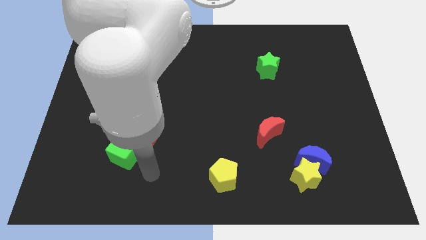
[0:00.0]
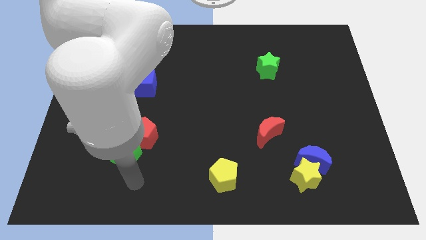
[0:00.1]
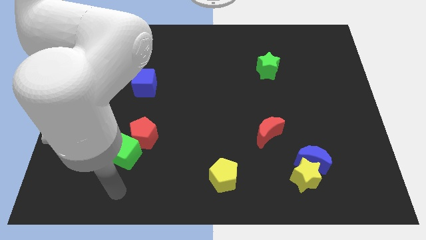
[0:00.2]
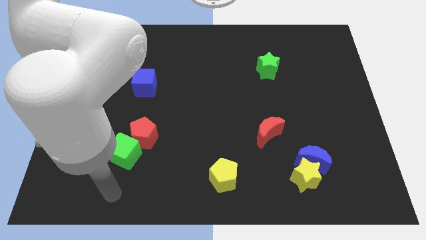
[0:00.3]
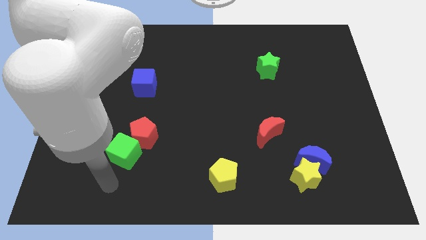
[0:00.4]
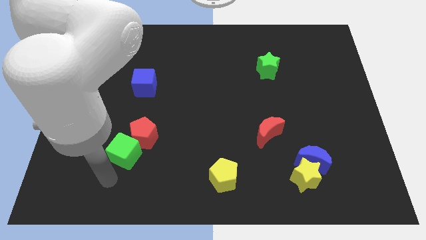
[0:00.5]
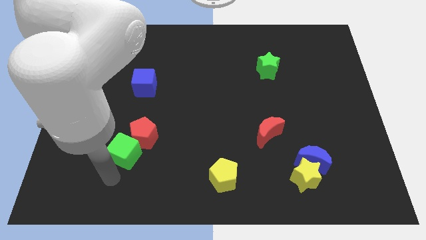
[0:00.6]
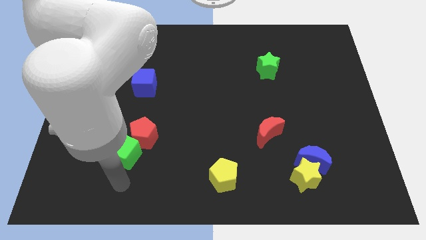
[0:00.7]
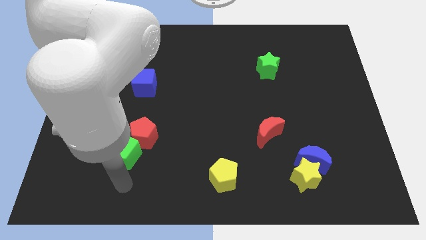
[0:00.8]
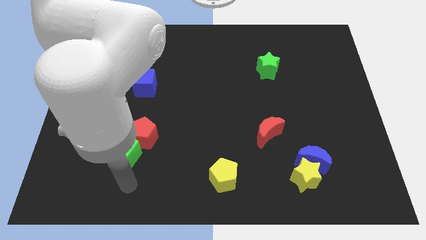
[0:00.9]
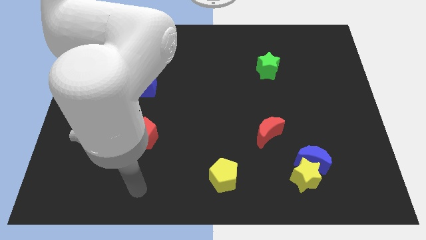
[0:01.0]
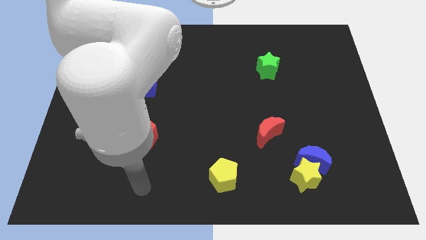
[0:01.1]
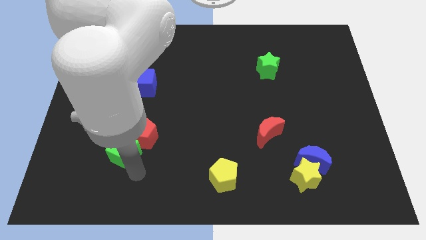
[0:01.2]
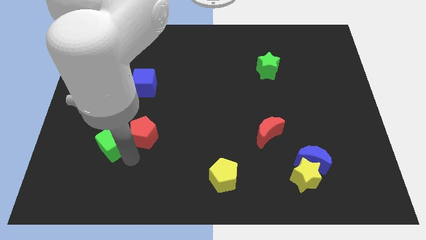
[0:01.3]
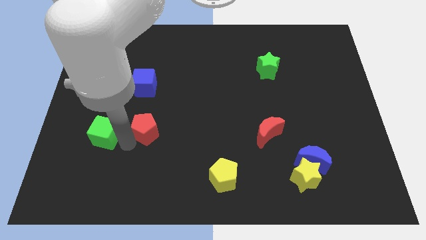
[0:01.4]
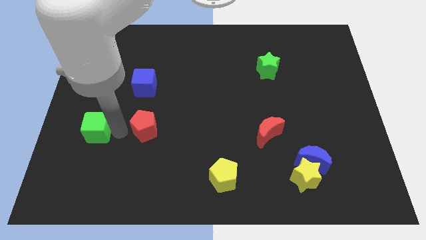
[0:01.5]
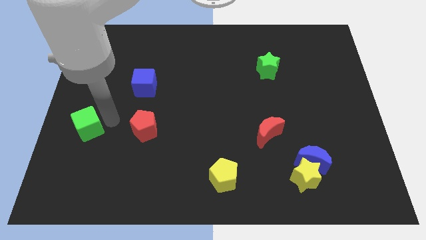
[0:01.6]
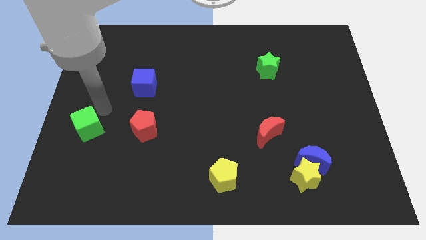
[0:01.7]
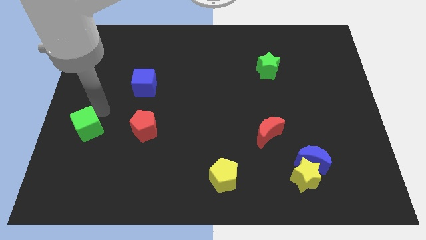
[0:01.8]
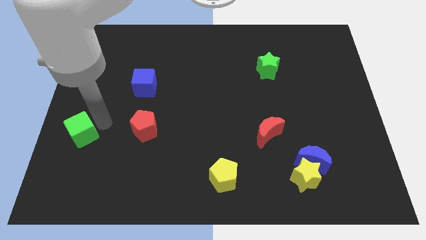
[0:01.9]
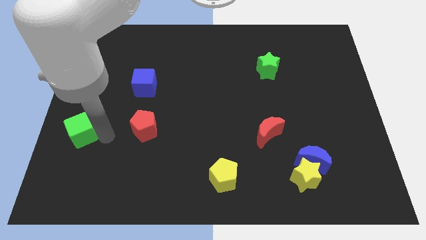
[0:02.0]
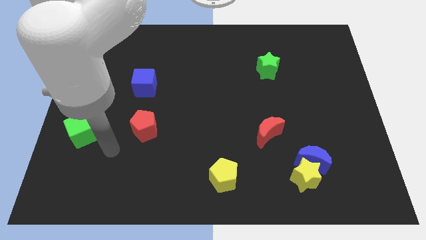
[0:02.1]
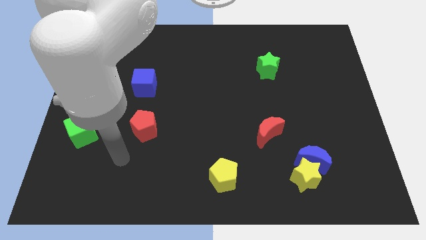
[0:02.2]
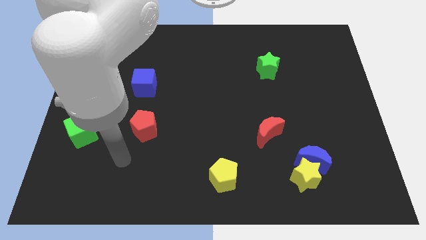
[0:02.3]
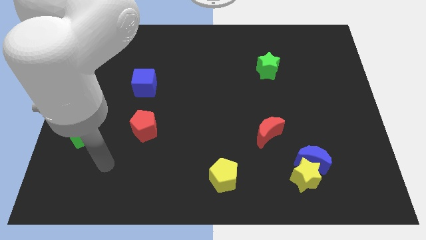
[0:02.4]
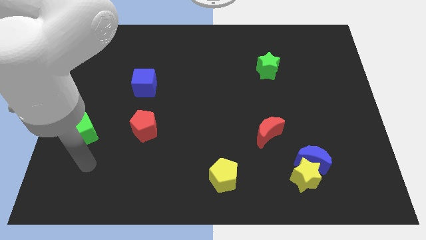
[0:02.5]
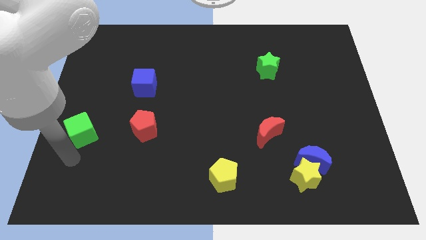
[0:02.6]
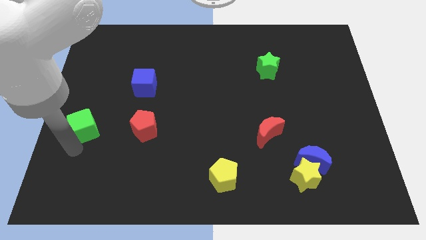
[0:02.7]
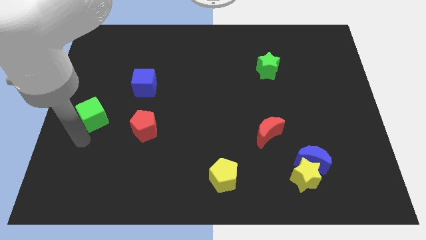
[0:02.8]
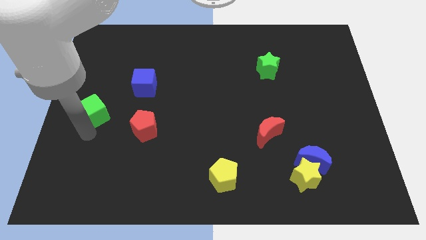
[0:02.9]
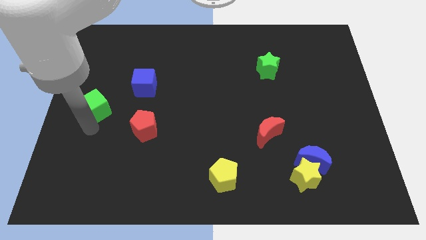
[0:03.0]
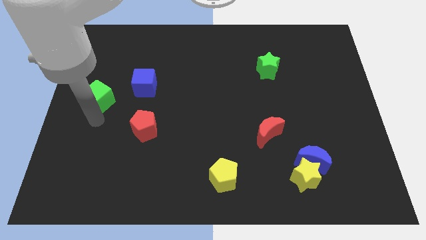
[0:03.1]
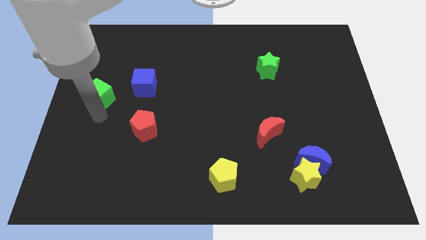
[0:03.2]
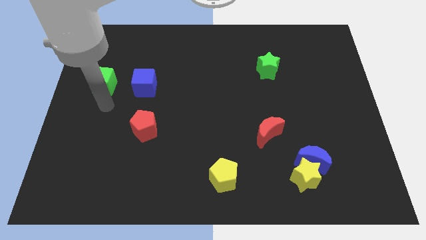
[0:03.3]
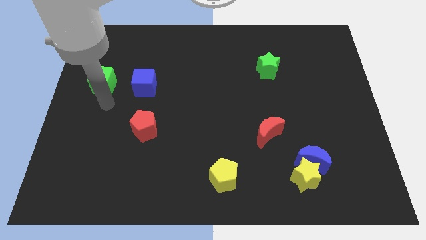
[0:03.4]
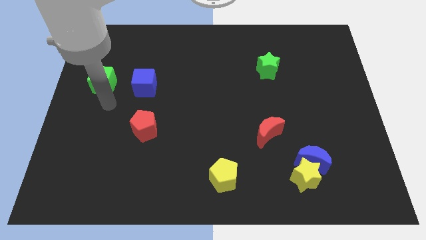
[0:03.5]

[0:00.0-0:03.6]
place the green cube left to the blue cube

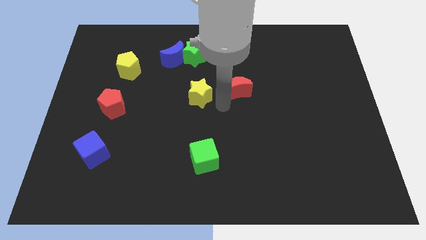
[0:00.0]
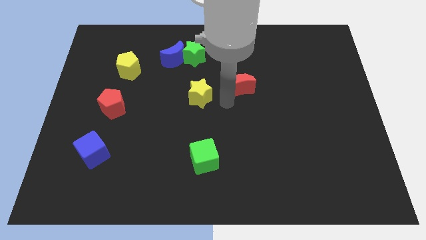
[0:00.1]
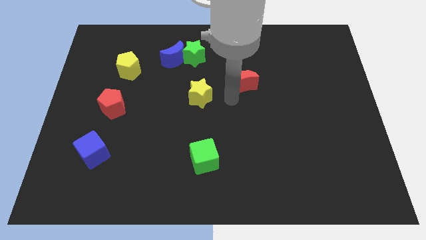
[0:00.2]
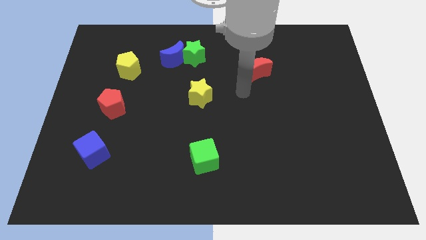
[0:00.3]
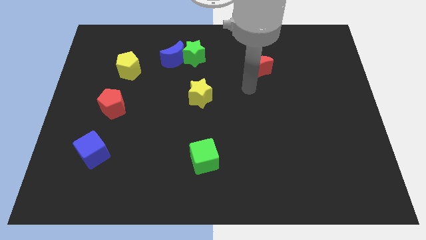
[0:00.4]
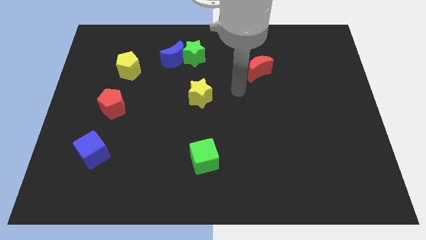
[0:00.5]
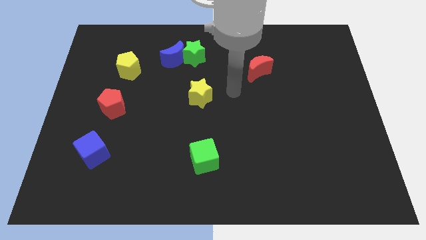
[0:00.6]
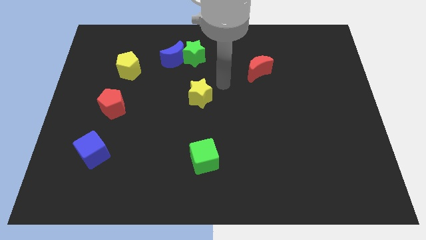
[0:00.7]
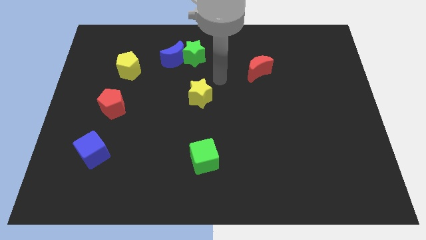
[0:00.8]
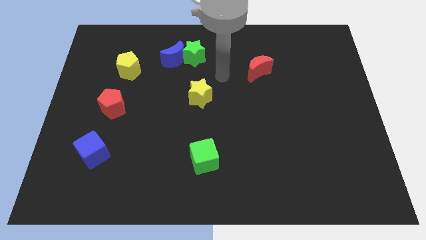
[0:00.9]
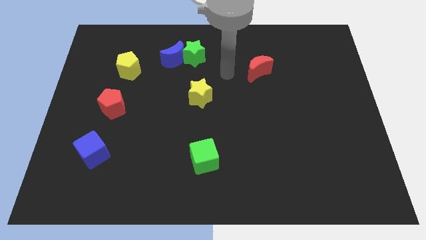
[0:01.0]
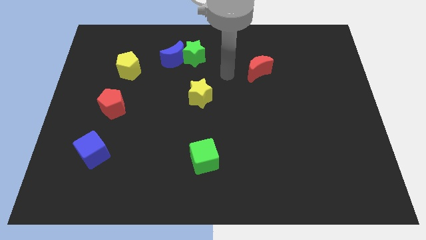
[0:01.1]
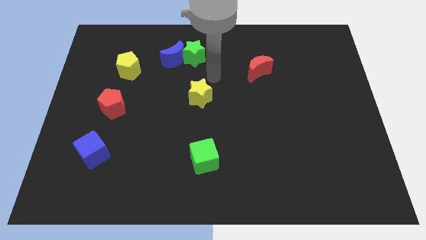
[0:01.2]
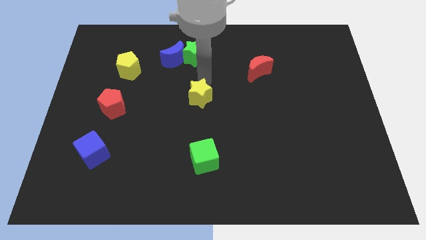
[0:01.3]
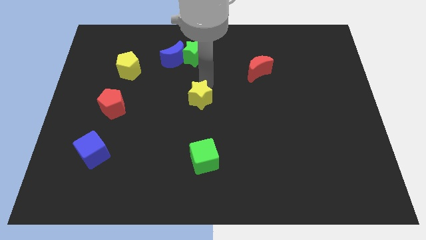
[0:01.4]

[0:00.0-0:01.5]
push the red moon upward

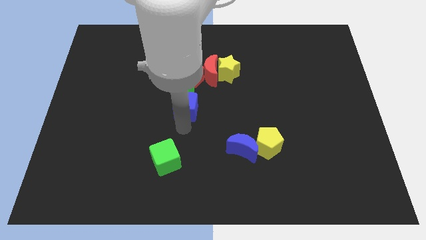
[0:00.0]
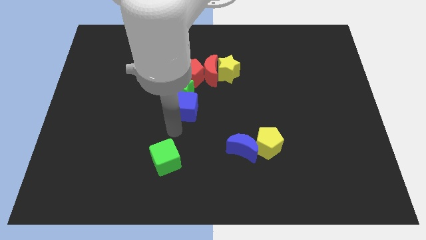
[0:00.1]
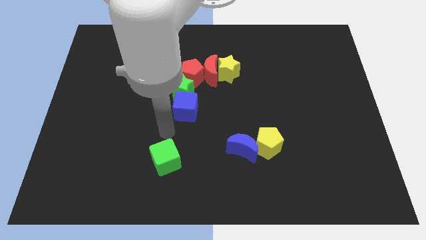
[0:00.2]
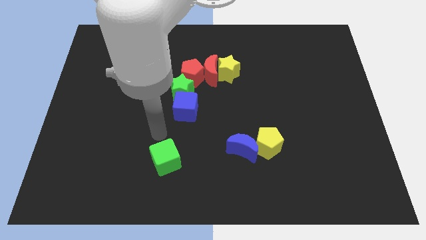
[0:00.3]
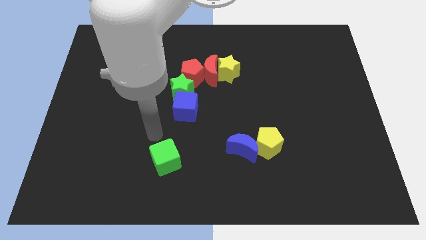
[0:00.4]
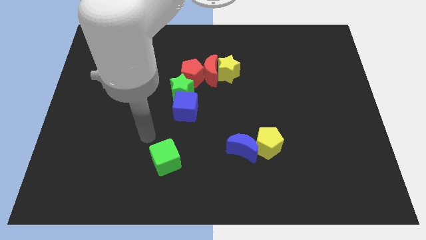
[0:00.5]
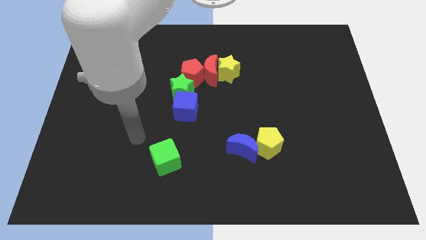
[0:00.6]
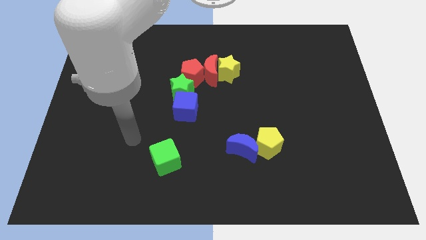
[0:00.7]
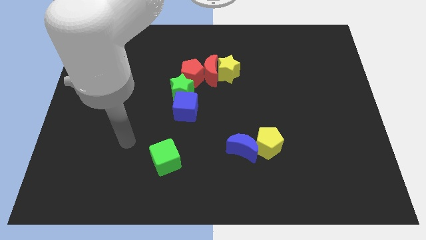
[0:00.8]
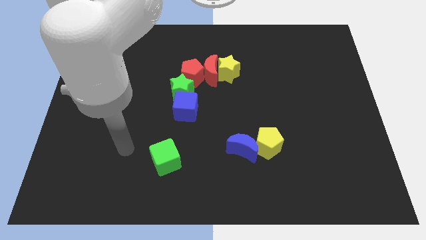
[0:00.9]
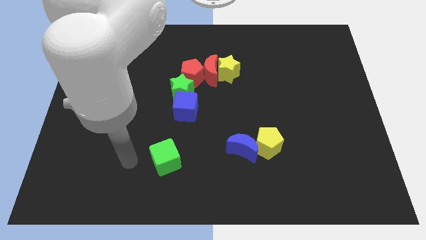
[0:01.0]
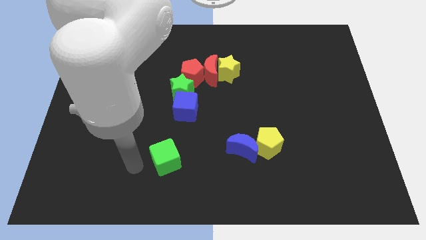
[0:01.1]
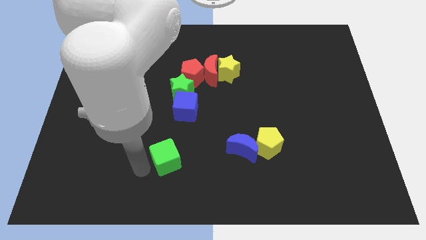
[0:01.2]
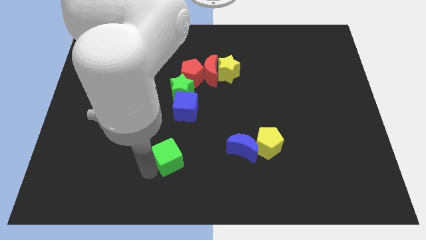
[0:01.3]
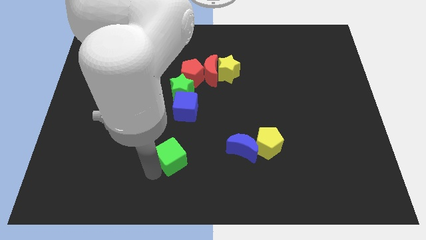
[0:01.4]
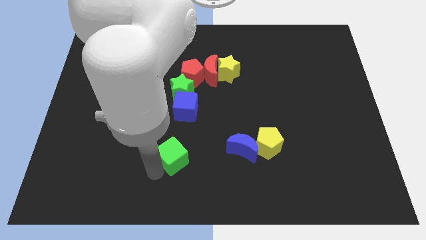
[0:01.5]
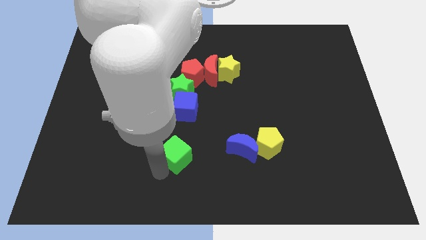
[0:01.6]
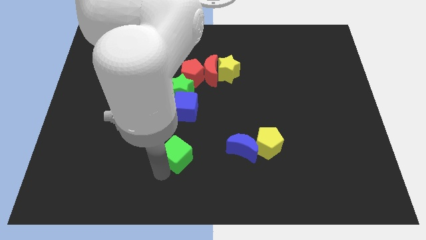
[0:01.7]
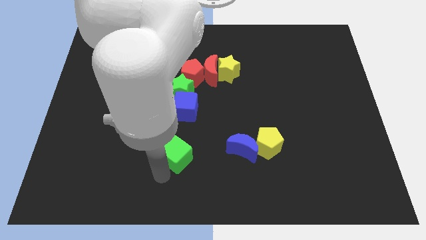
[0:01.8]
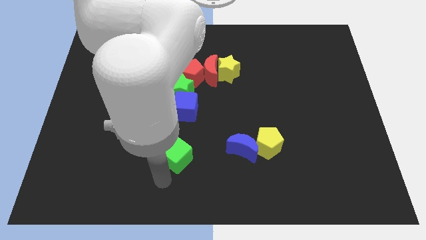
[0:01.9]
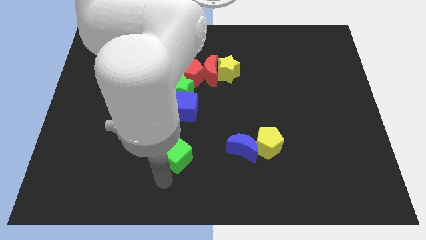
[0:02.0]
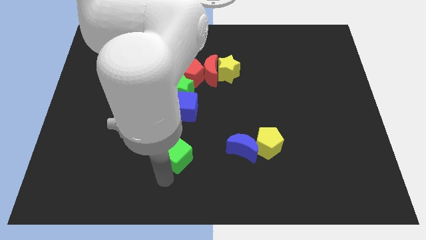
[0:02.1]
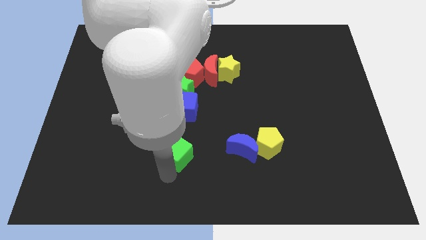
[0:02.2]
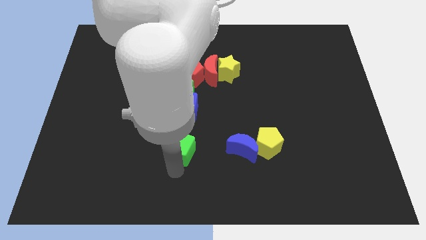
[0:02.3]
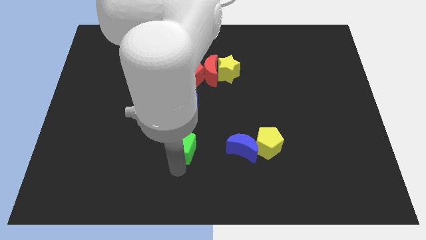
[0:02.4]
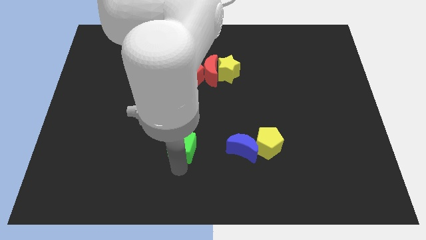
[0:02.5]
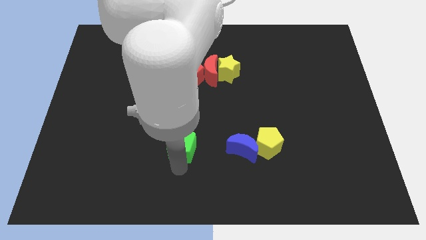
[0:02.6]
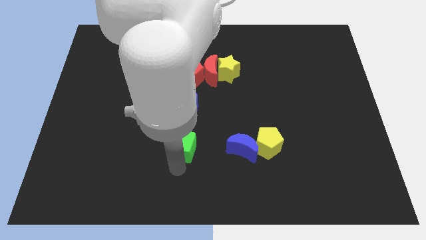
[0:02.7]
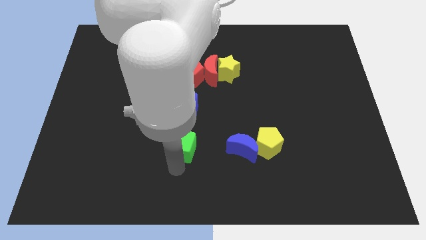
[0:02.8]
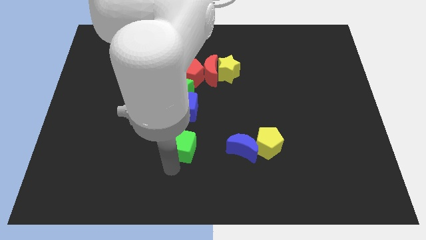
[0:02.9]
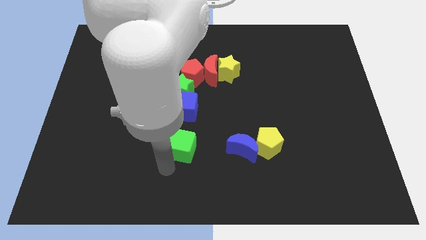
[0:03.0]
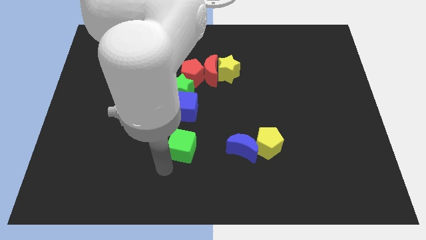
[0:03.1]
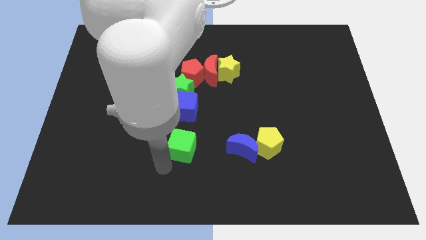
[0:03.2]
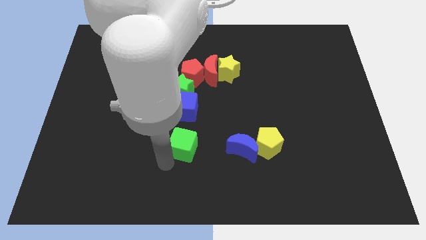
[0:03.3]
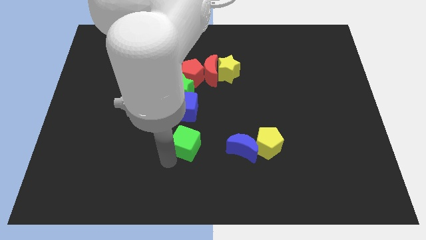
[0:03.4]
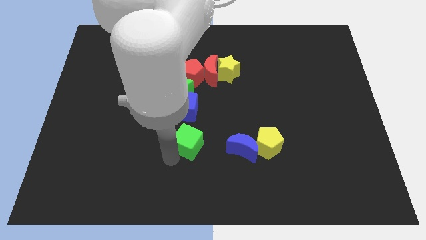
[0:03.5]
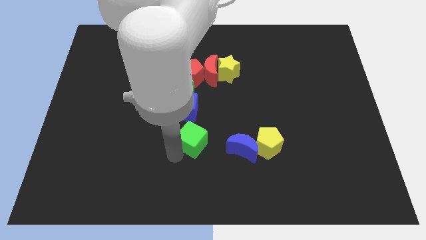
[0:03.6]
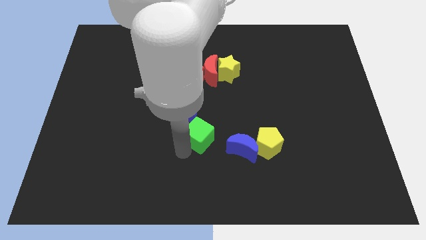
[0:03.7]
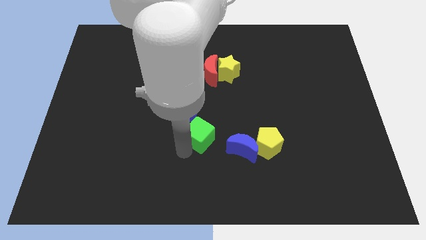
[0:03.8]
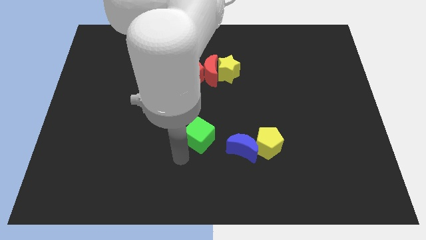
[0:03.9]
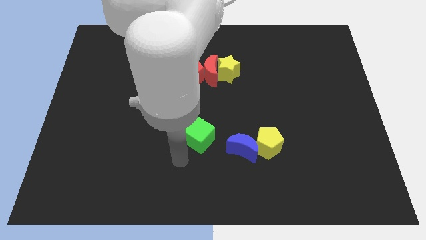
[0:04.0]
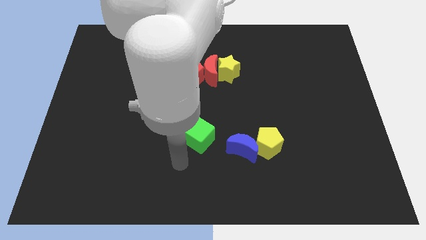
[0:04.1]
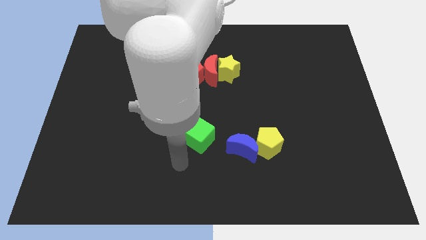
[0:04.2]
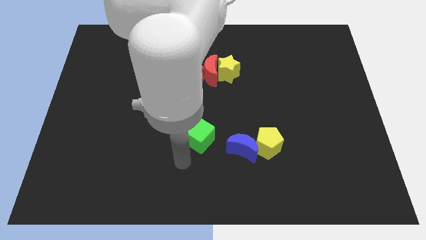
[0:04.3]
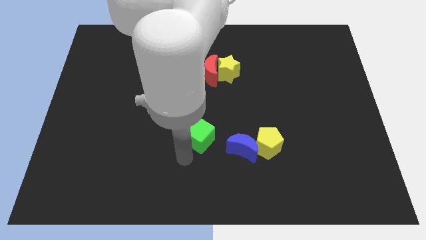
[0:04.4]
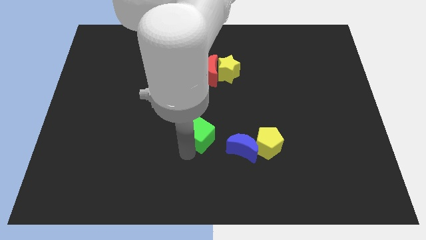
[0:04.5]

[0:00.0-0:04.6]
place the green cube below the blue cube
